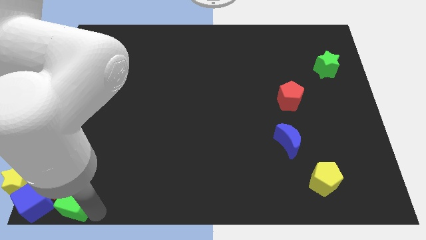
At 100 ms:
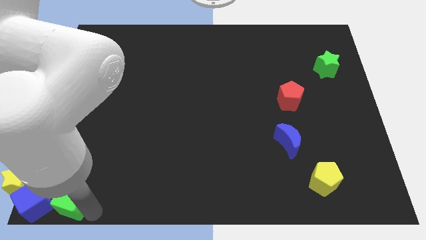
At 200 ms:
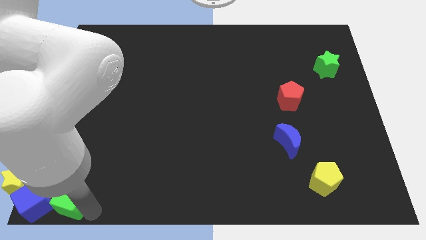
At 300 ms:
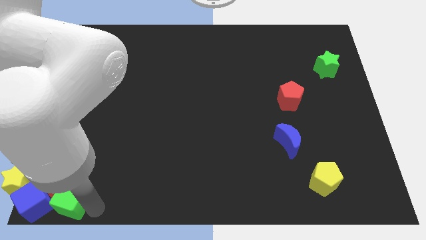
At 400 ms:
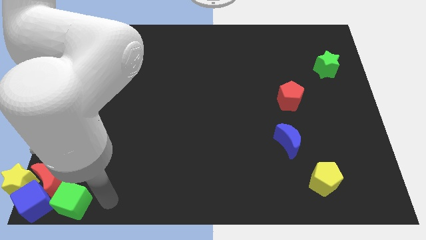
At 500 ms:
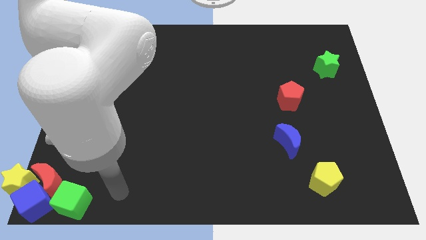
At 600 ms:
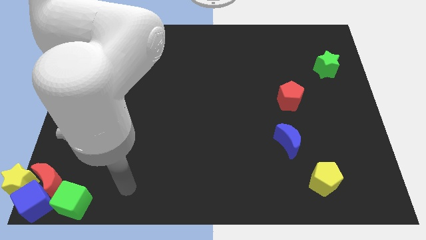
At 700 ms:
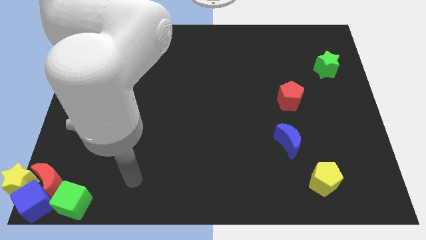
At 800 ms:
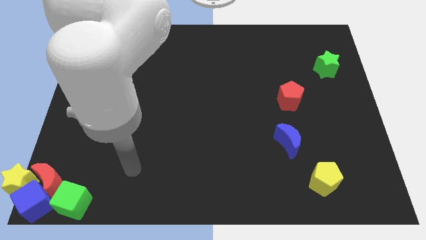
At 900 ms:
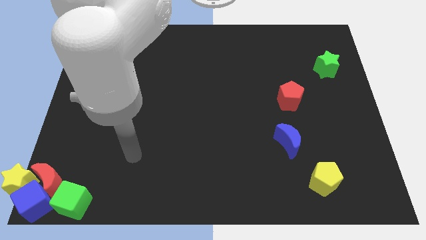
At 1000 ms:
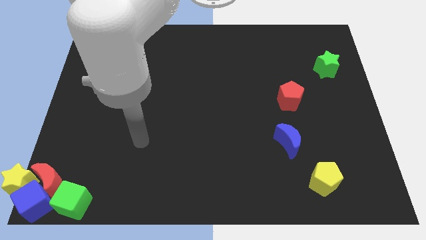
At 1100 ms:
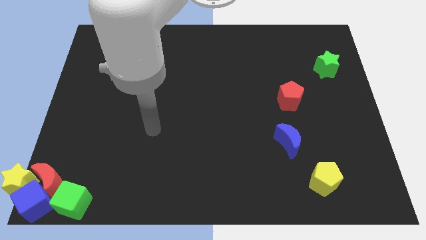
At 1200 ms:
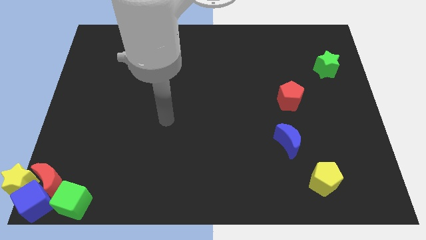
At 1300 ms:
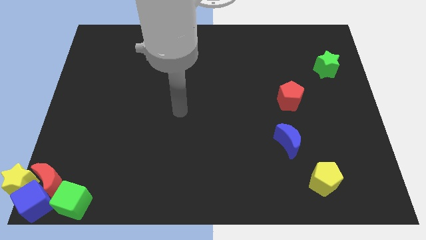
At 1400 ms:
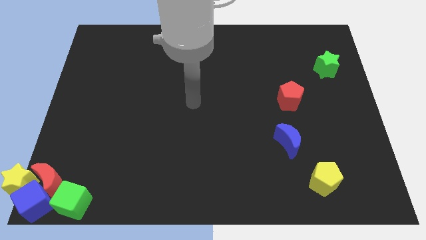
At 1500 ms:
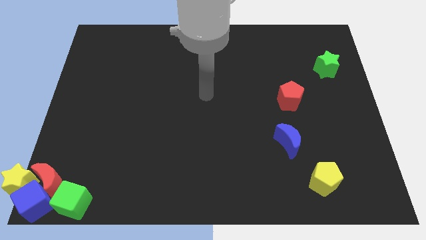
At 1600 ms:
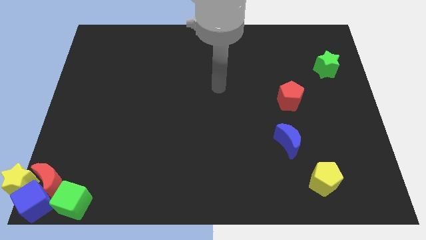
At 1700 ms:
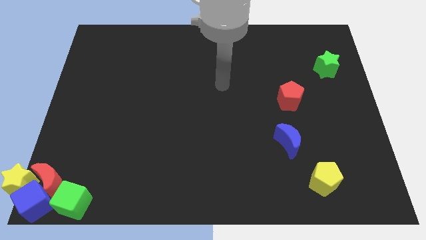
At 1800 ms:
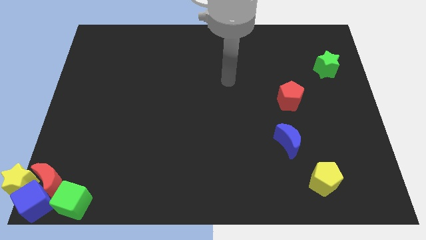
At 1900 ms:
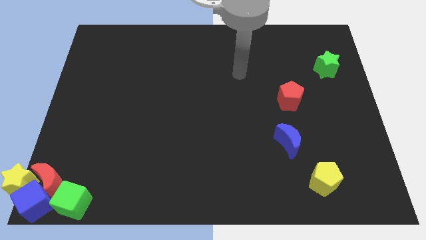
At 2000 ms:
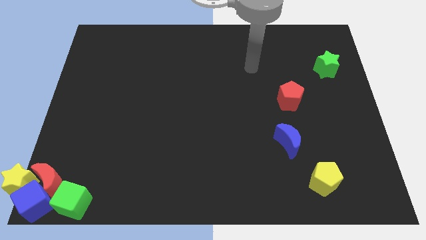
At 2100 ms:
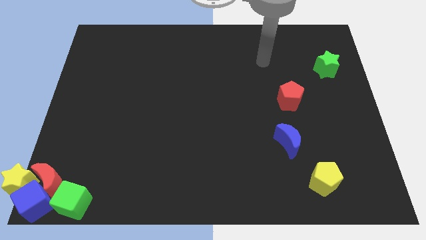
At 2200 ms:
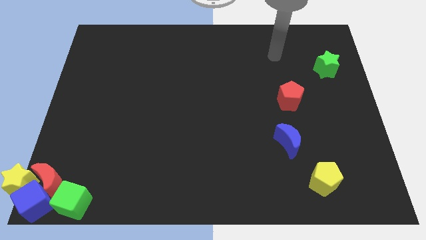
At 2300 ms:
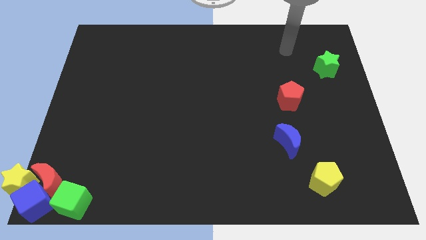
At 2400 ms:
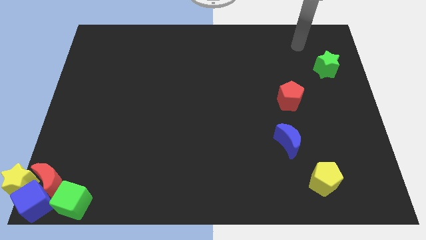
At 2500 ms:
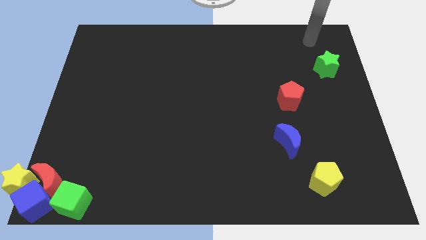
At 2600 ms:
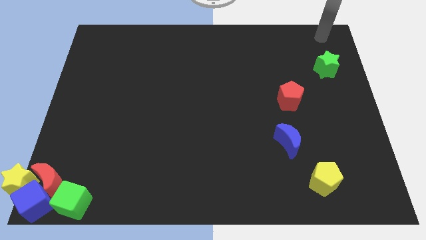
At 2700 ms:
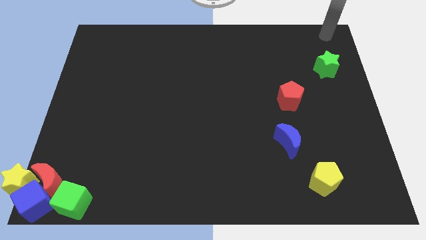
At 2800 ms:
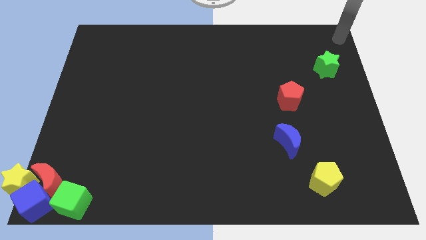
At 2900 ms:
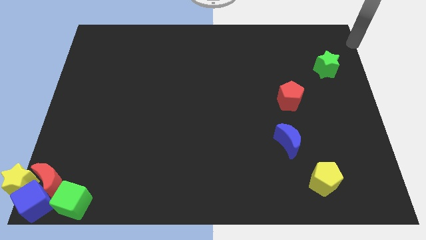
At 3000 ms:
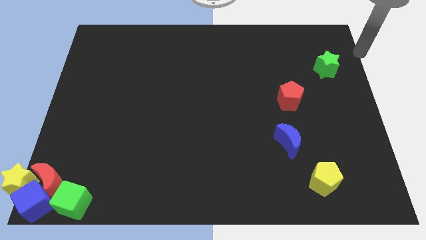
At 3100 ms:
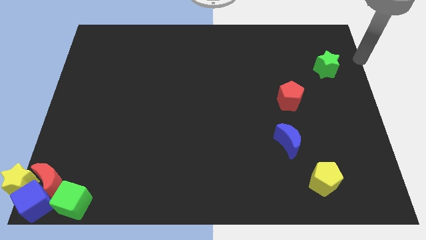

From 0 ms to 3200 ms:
move the arm right to the green cube

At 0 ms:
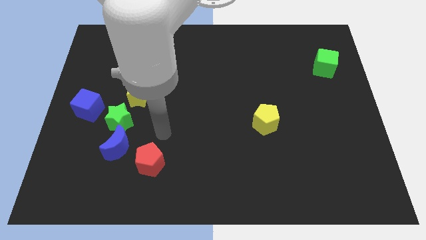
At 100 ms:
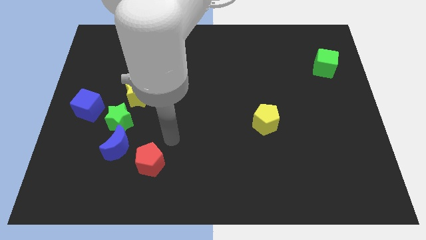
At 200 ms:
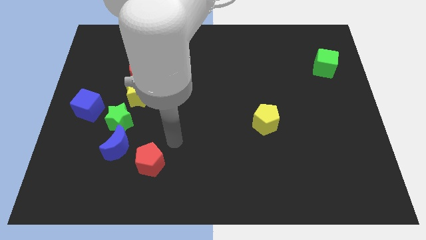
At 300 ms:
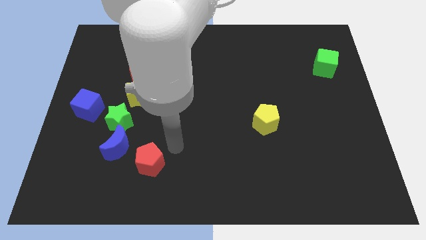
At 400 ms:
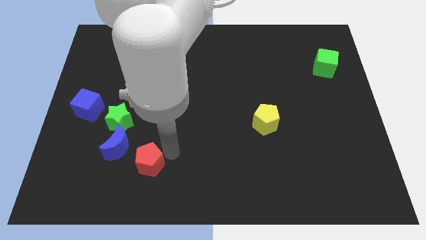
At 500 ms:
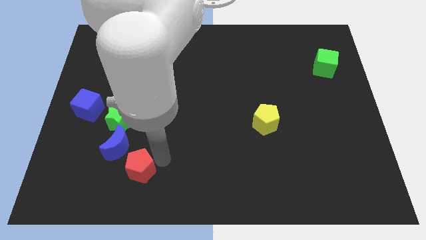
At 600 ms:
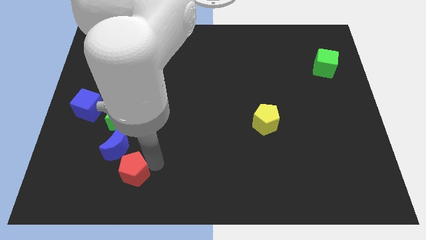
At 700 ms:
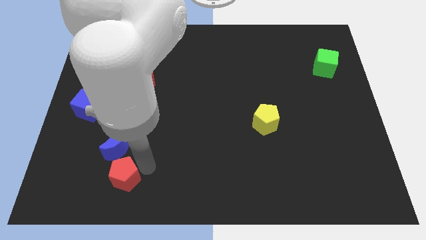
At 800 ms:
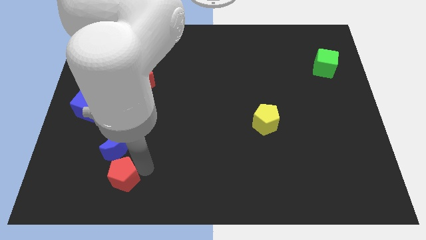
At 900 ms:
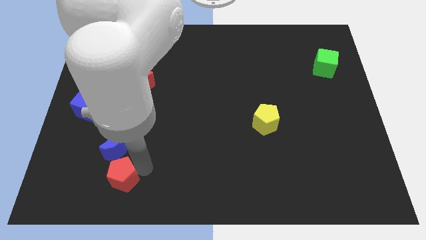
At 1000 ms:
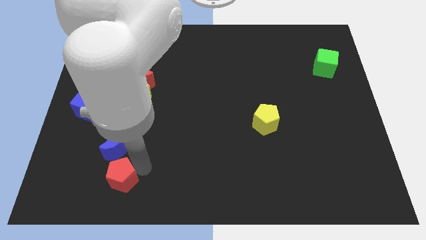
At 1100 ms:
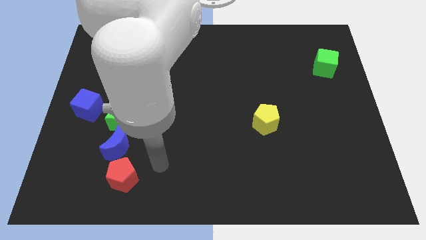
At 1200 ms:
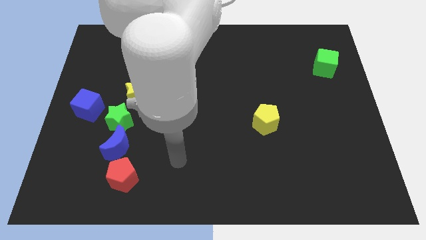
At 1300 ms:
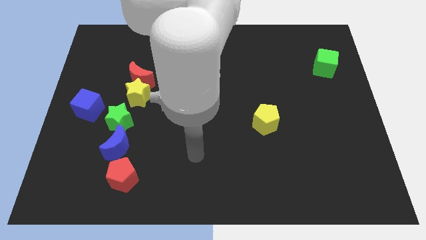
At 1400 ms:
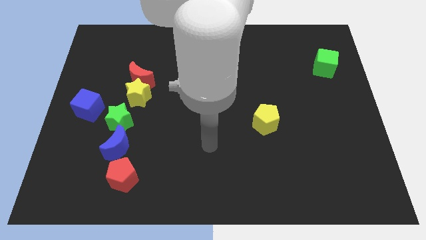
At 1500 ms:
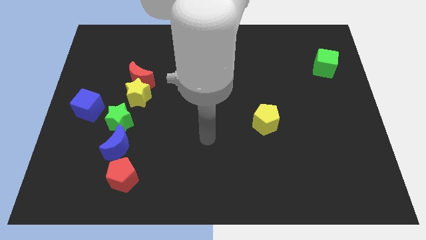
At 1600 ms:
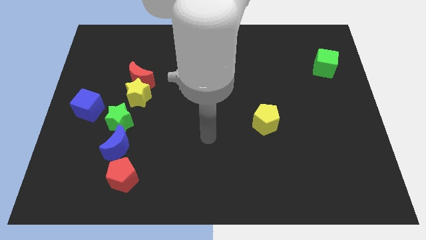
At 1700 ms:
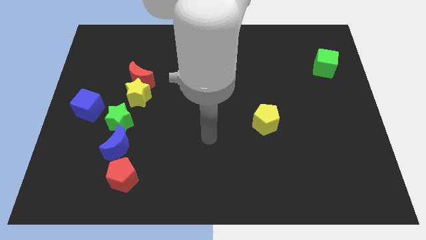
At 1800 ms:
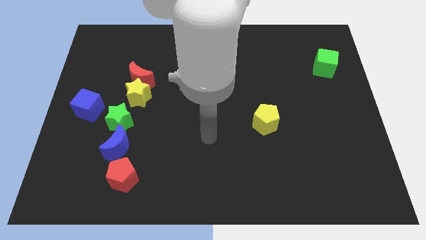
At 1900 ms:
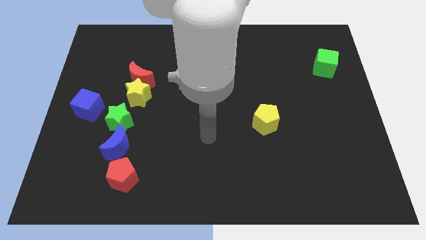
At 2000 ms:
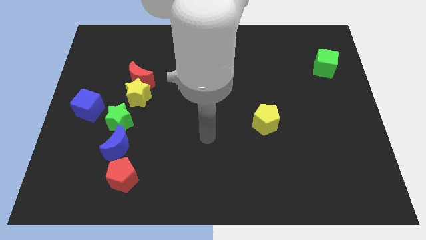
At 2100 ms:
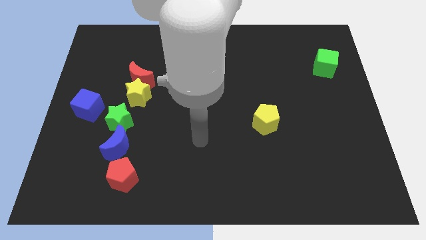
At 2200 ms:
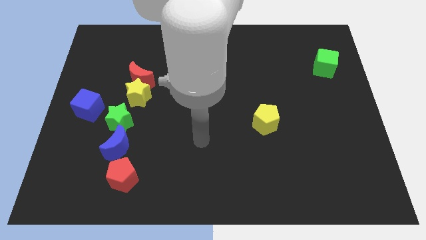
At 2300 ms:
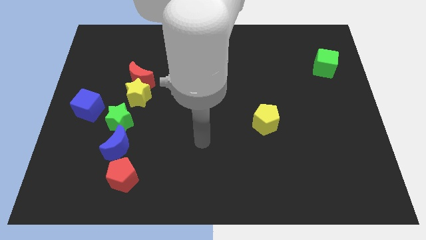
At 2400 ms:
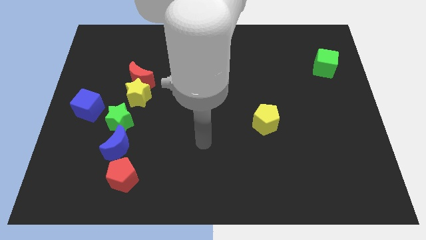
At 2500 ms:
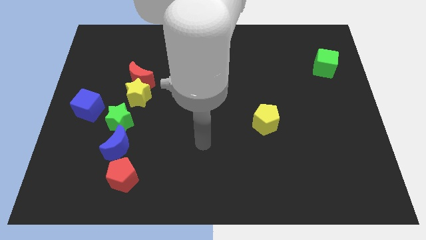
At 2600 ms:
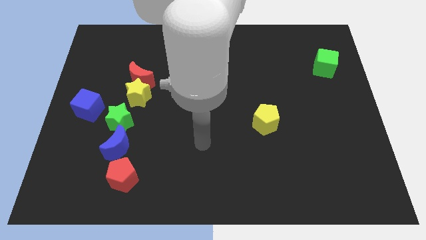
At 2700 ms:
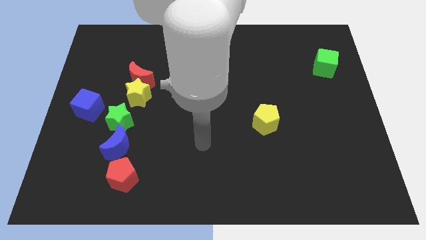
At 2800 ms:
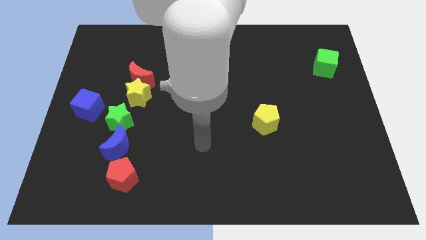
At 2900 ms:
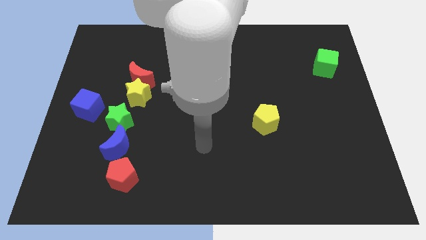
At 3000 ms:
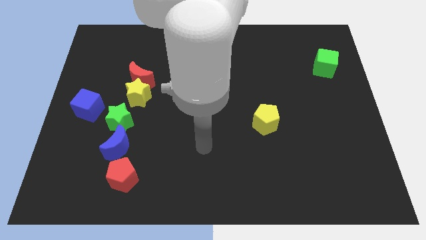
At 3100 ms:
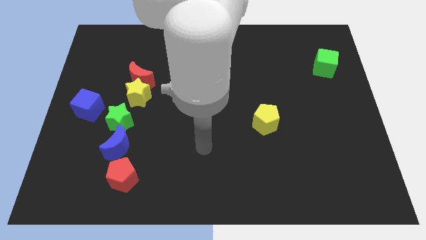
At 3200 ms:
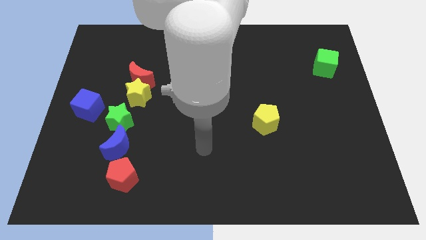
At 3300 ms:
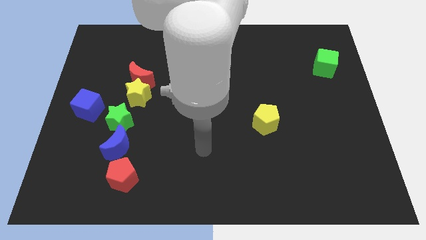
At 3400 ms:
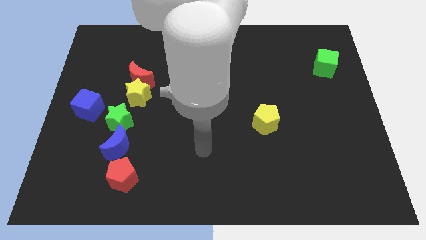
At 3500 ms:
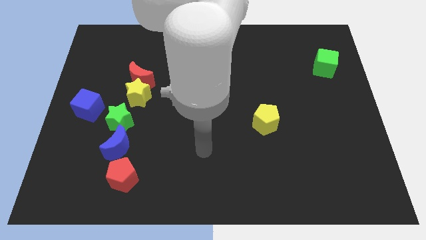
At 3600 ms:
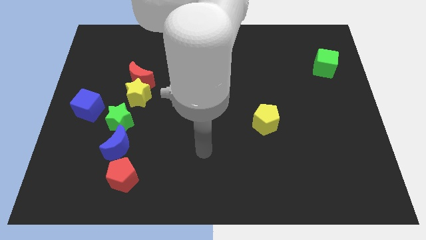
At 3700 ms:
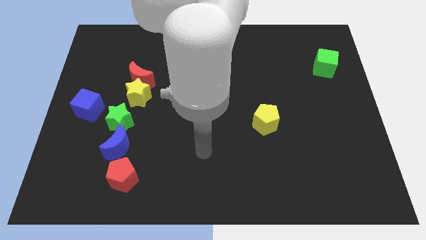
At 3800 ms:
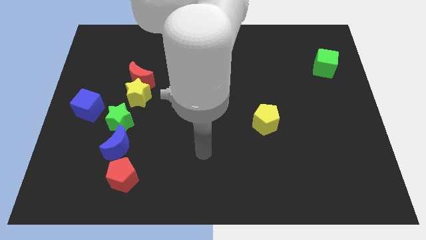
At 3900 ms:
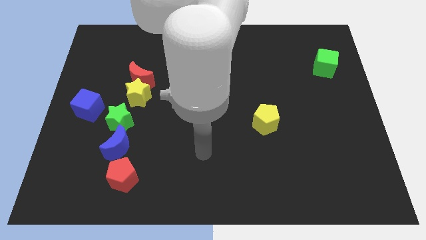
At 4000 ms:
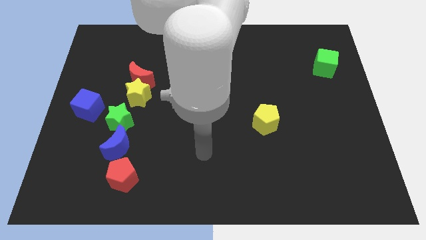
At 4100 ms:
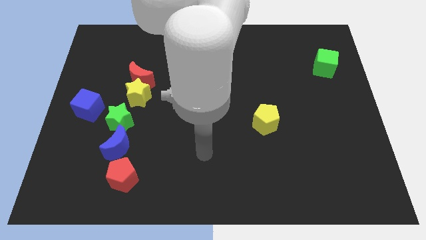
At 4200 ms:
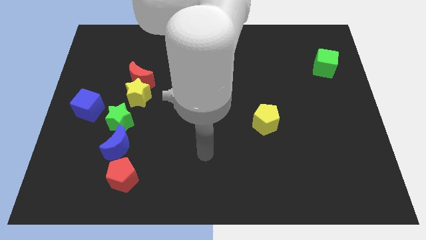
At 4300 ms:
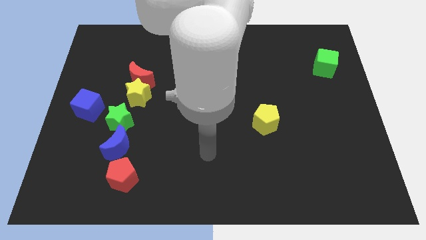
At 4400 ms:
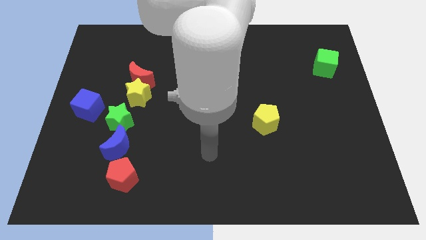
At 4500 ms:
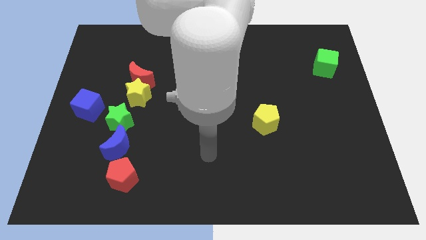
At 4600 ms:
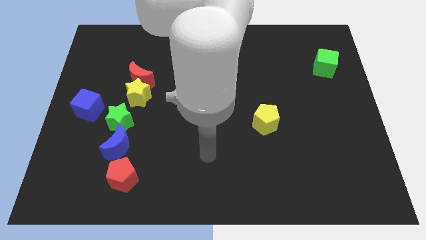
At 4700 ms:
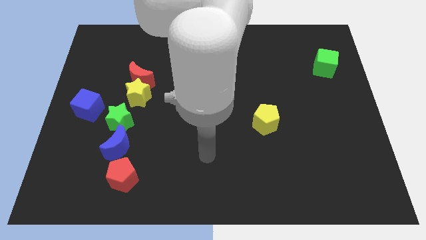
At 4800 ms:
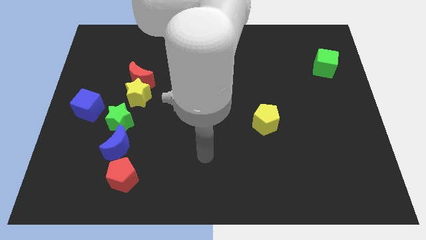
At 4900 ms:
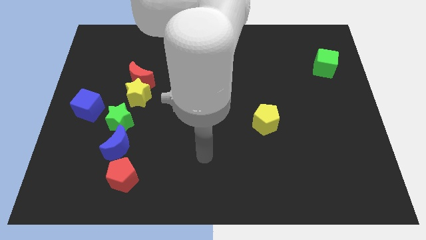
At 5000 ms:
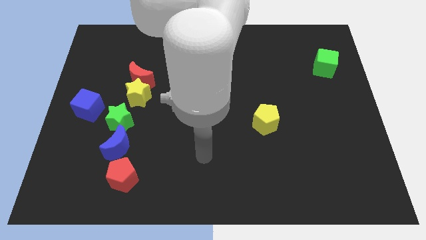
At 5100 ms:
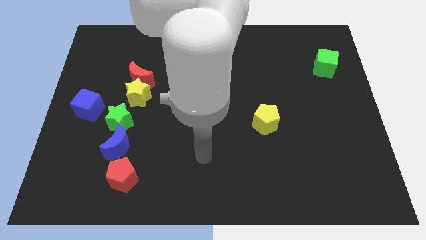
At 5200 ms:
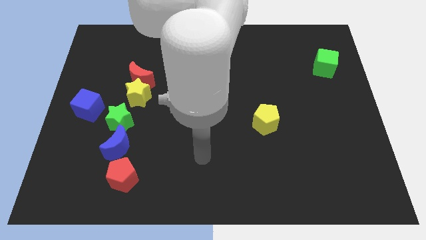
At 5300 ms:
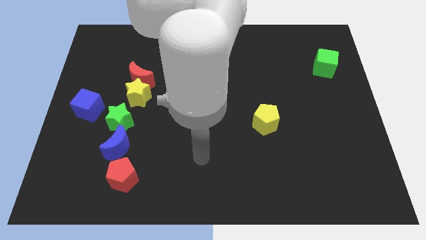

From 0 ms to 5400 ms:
place the red pentagon below the blue moon

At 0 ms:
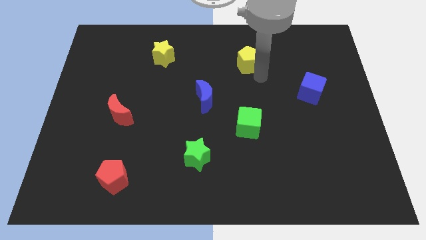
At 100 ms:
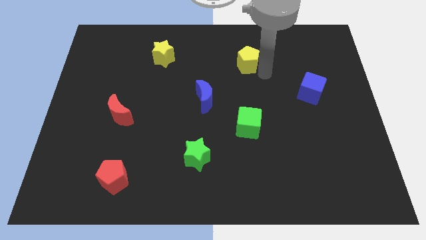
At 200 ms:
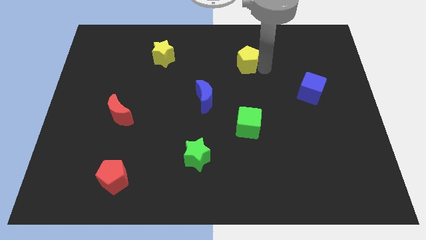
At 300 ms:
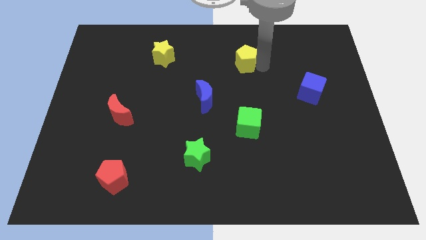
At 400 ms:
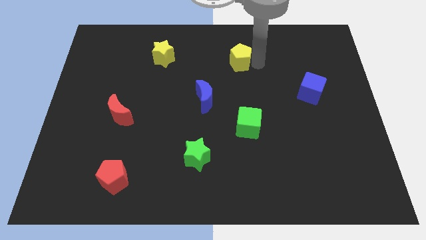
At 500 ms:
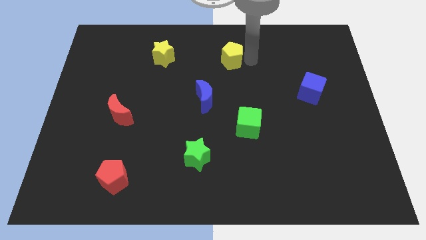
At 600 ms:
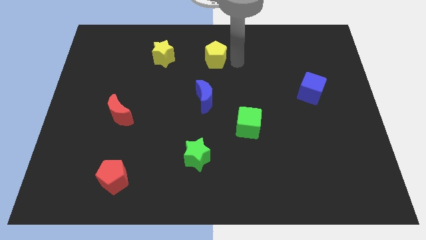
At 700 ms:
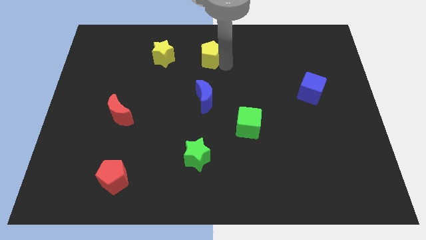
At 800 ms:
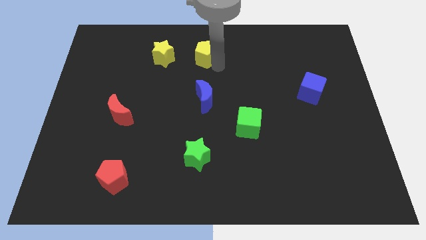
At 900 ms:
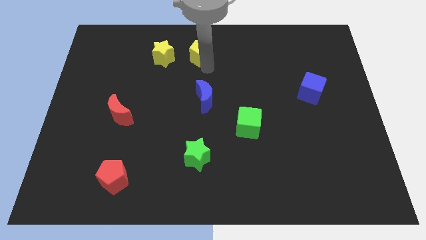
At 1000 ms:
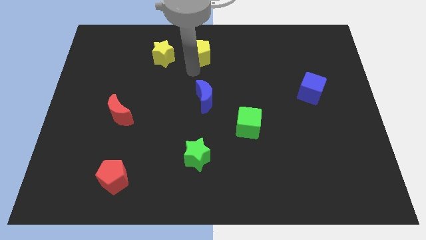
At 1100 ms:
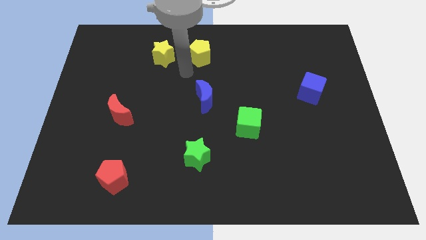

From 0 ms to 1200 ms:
put the yellow pentagon to the right of the yellow star
